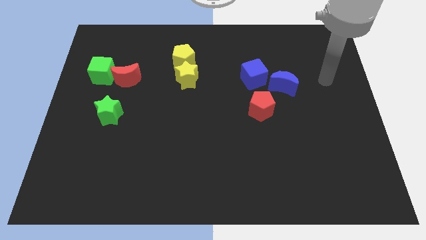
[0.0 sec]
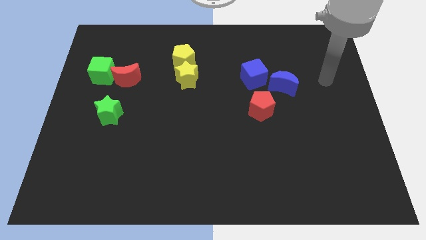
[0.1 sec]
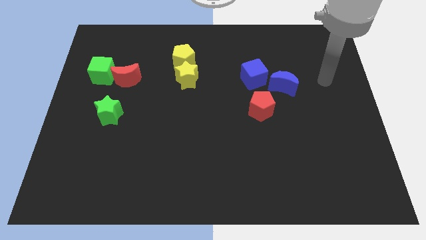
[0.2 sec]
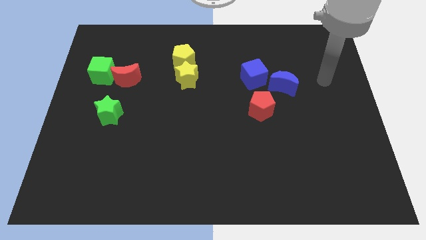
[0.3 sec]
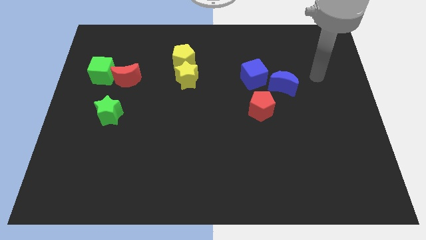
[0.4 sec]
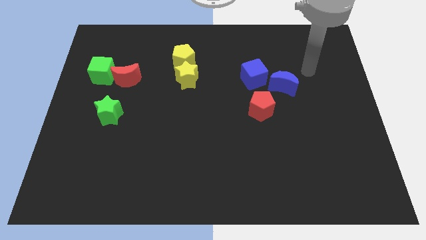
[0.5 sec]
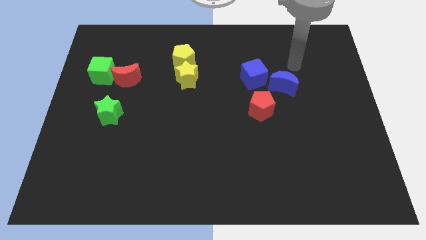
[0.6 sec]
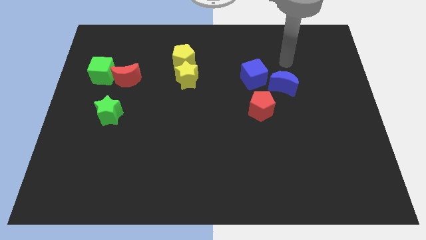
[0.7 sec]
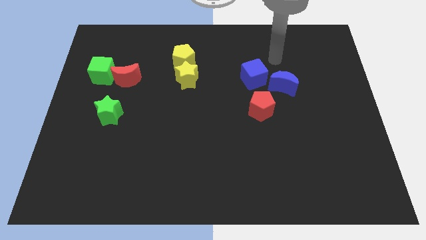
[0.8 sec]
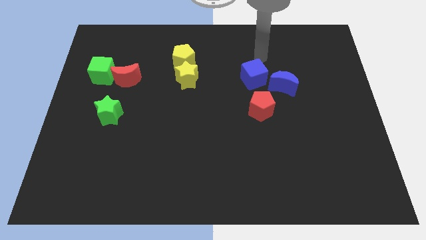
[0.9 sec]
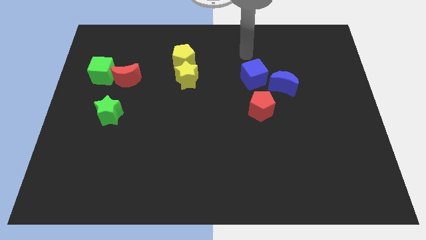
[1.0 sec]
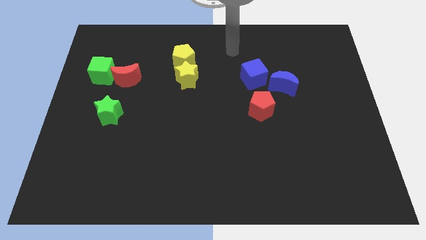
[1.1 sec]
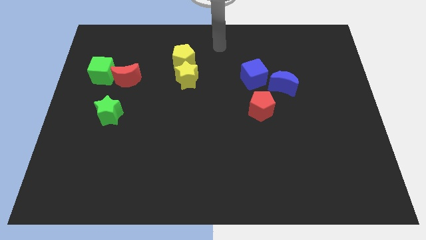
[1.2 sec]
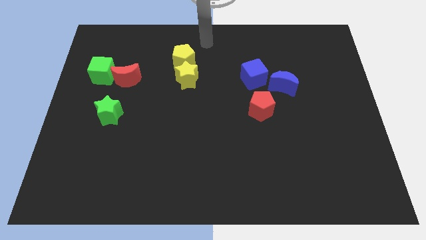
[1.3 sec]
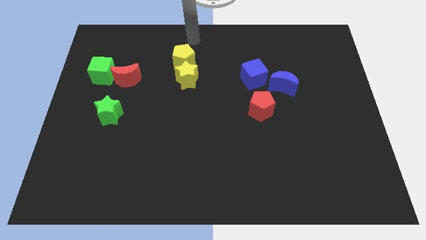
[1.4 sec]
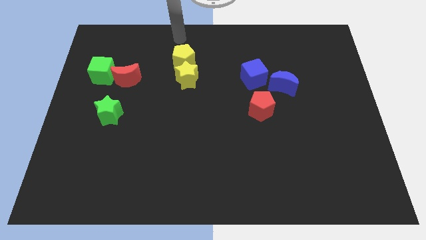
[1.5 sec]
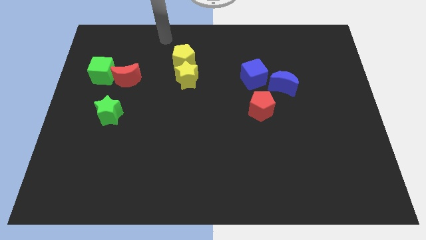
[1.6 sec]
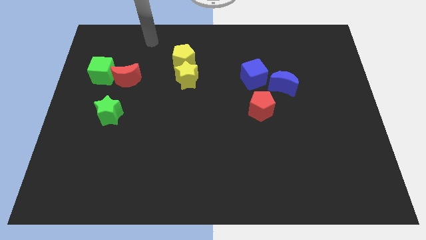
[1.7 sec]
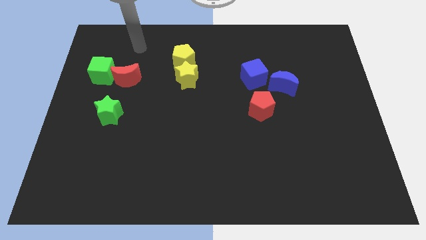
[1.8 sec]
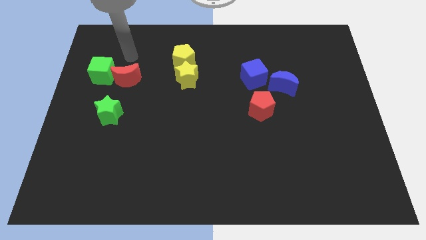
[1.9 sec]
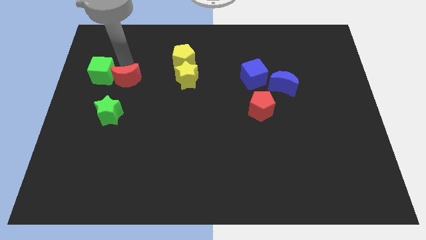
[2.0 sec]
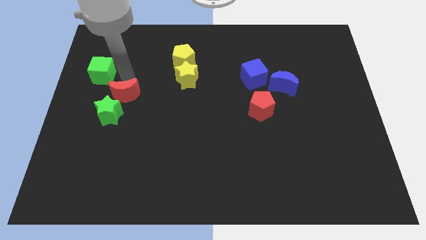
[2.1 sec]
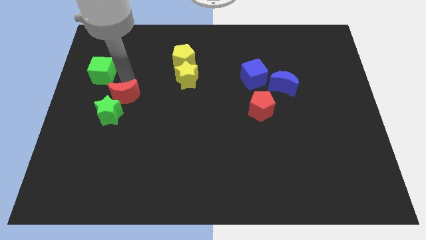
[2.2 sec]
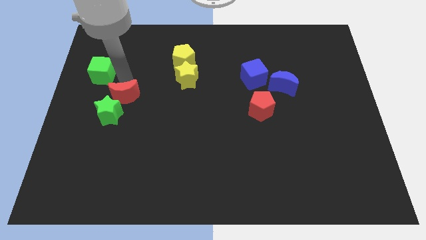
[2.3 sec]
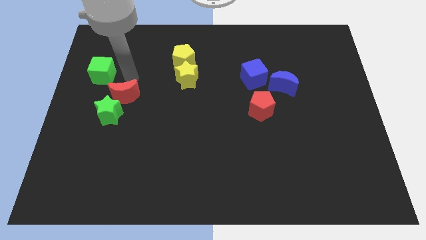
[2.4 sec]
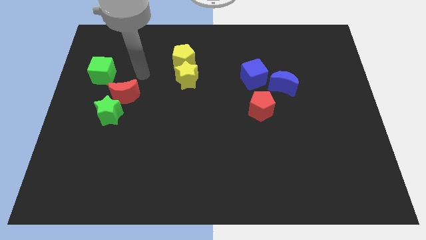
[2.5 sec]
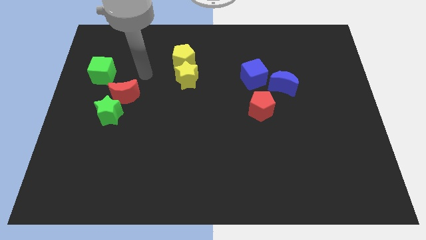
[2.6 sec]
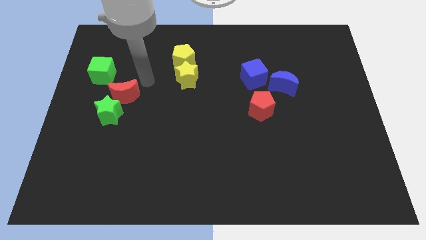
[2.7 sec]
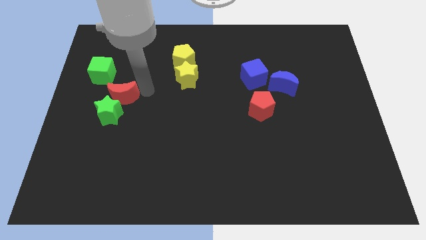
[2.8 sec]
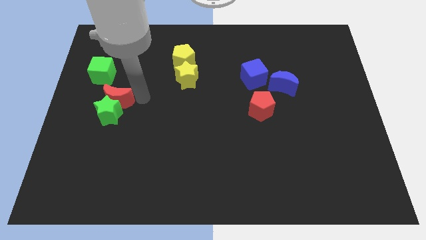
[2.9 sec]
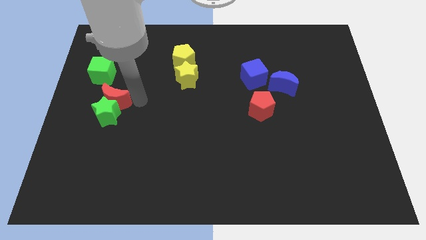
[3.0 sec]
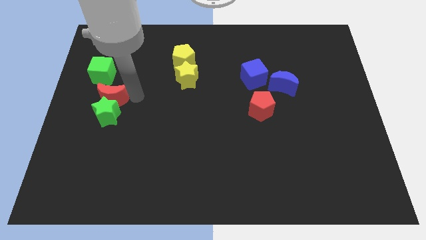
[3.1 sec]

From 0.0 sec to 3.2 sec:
push red crescent slightly to the left

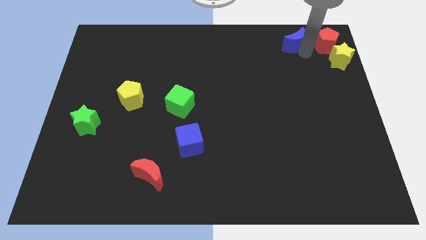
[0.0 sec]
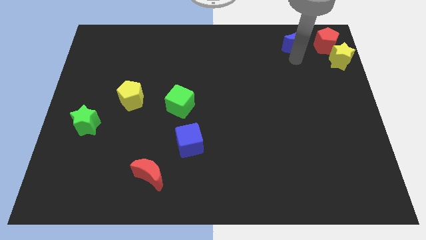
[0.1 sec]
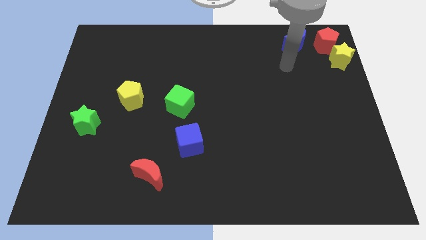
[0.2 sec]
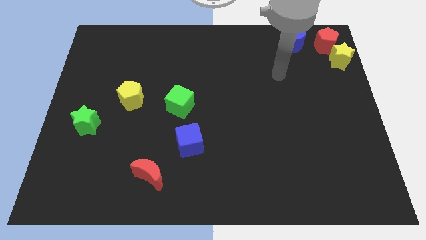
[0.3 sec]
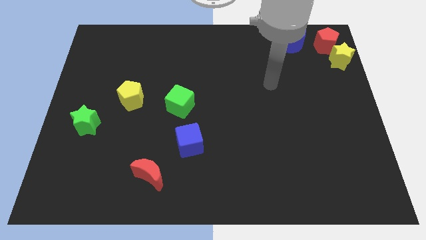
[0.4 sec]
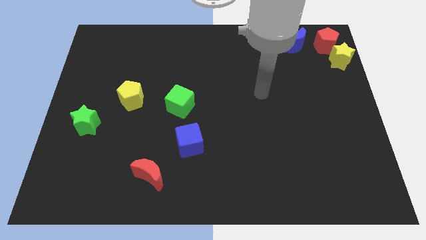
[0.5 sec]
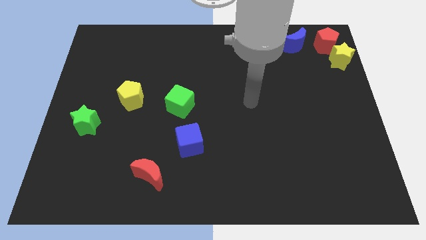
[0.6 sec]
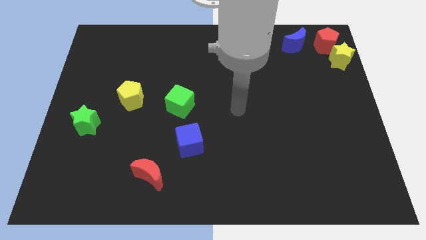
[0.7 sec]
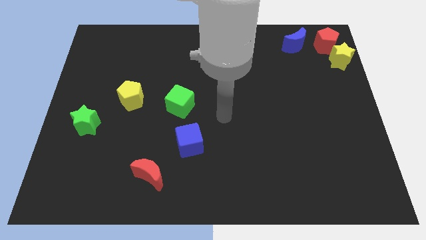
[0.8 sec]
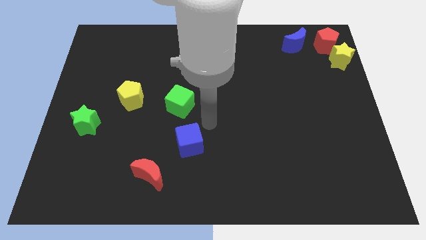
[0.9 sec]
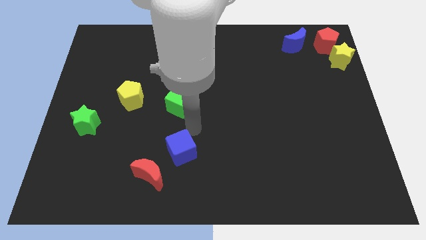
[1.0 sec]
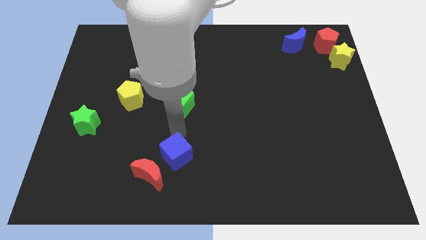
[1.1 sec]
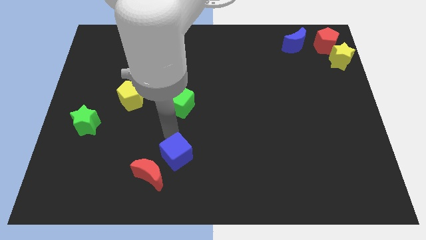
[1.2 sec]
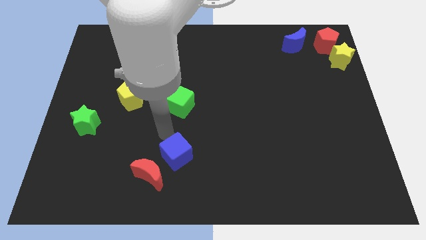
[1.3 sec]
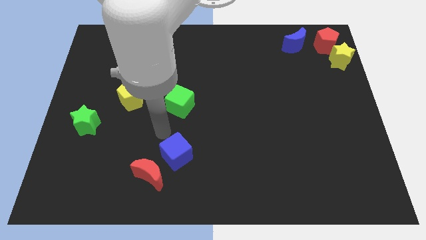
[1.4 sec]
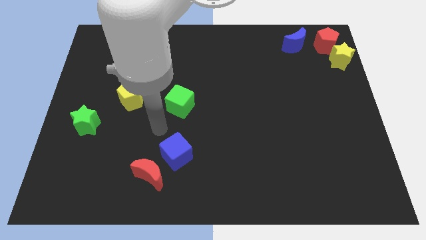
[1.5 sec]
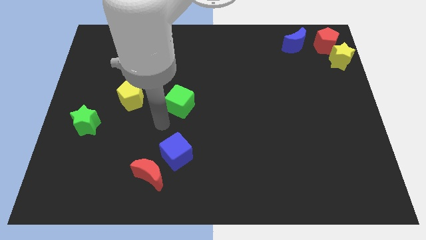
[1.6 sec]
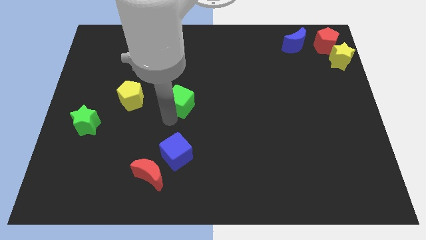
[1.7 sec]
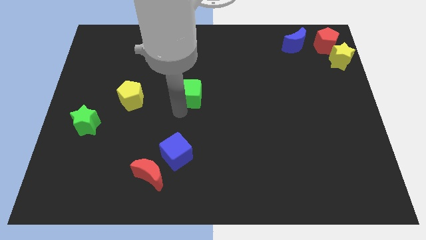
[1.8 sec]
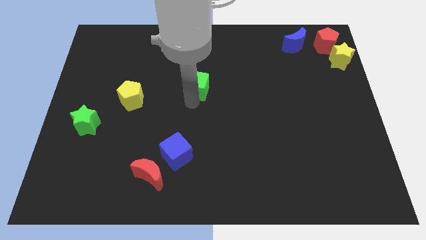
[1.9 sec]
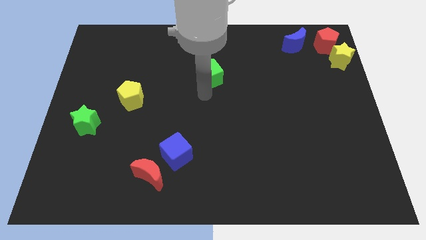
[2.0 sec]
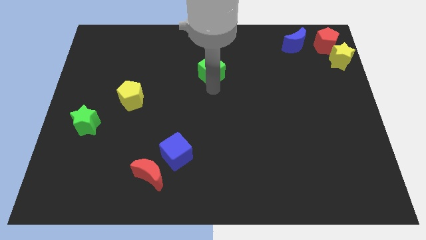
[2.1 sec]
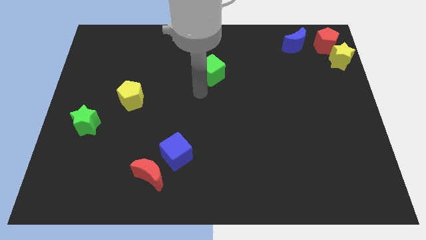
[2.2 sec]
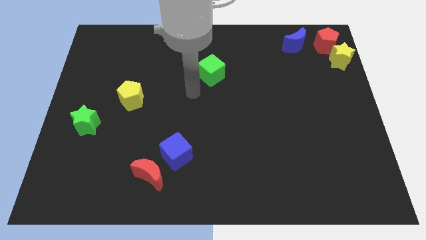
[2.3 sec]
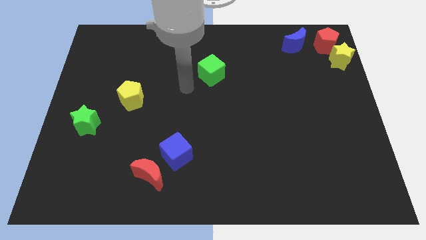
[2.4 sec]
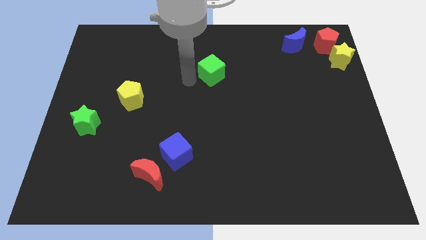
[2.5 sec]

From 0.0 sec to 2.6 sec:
push the cubes in opposite directions

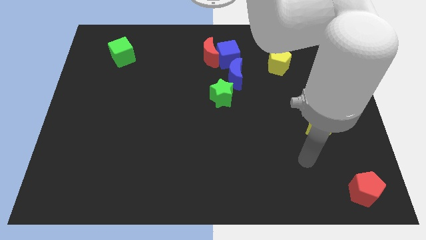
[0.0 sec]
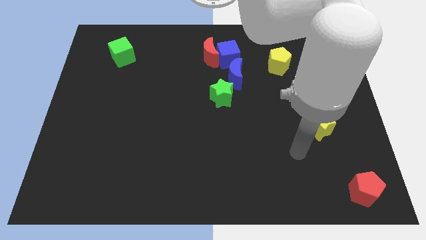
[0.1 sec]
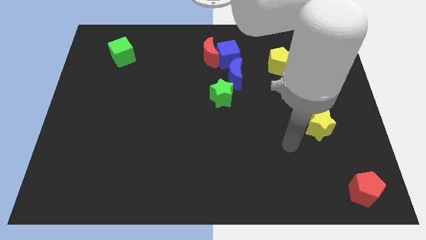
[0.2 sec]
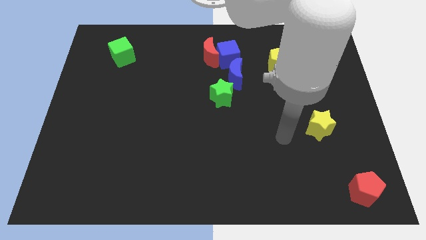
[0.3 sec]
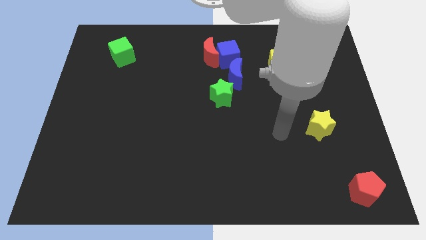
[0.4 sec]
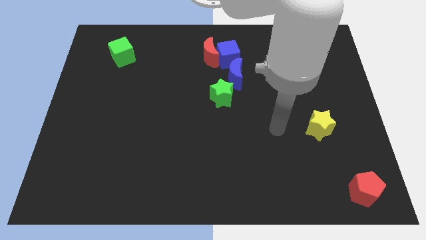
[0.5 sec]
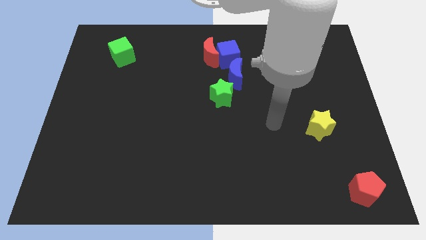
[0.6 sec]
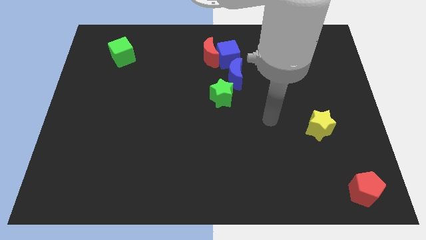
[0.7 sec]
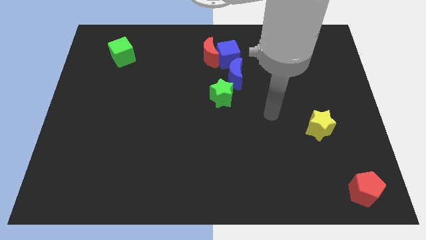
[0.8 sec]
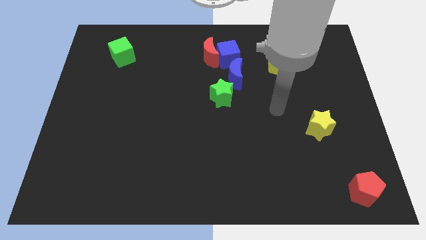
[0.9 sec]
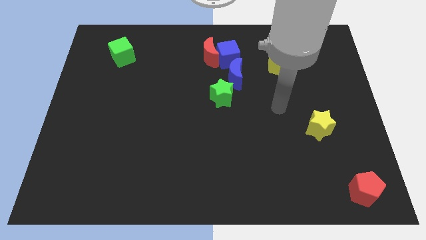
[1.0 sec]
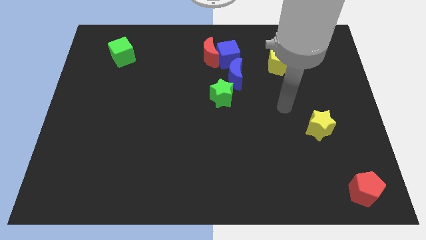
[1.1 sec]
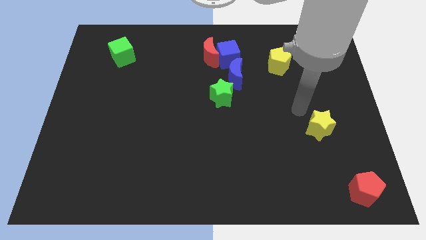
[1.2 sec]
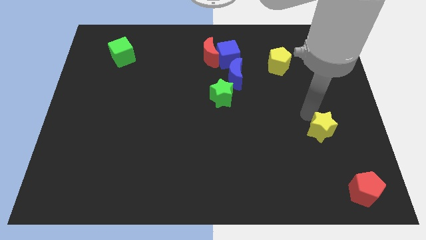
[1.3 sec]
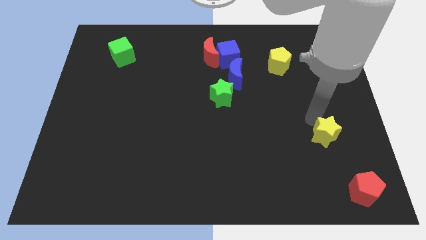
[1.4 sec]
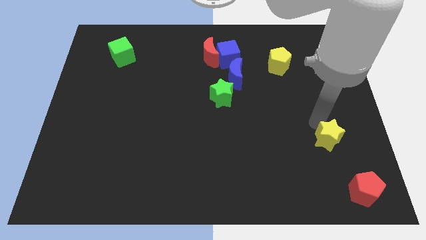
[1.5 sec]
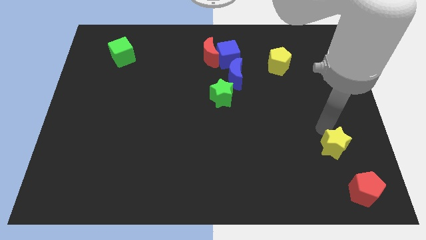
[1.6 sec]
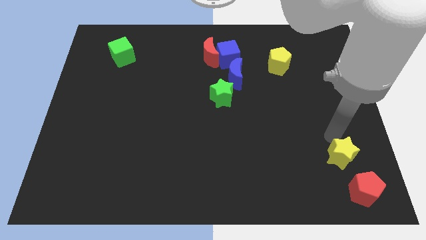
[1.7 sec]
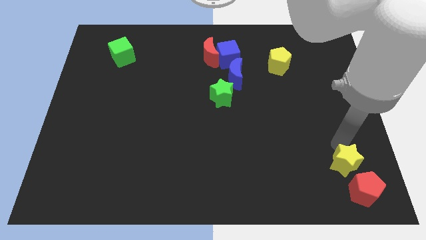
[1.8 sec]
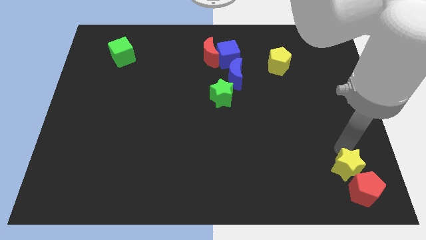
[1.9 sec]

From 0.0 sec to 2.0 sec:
push the yellow star close to the red pentagon

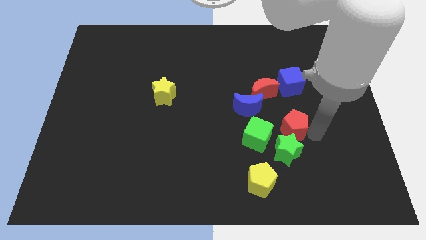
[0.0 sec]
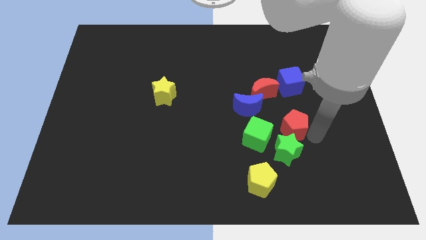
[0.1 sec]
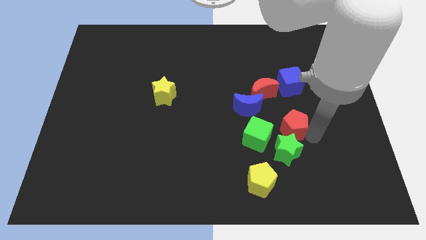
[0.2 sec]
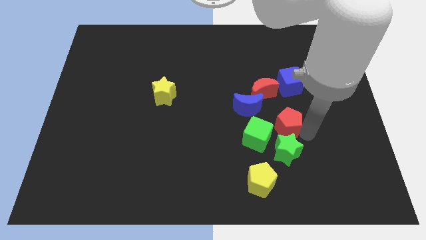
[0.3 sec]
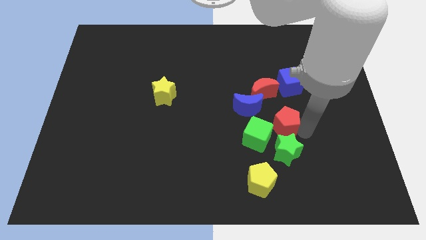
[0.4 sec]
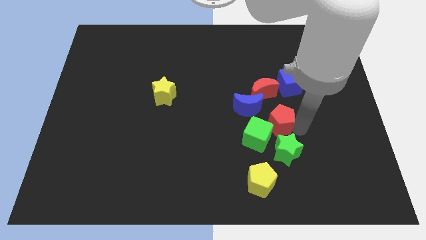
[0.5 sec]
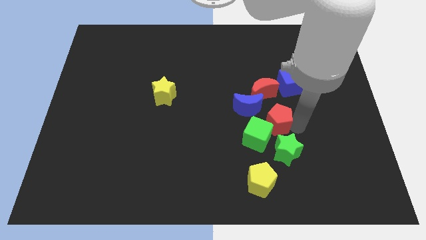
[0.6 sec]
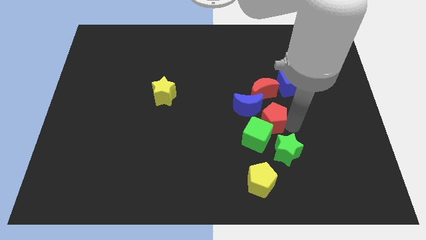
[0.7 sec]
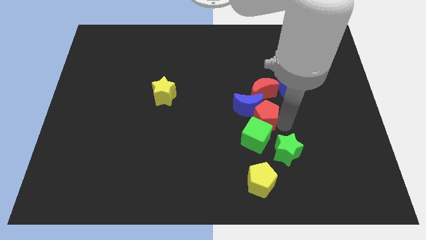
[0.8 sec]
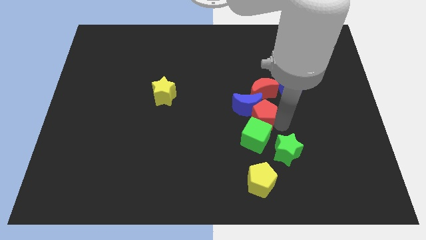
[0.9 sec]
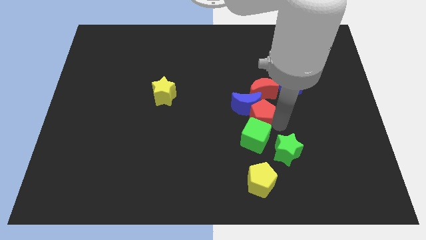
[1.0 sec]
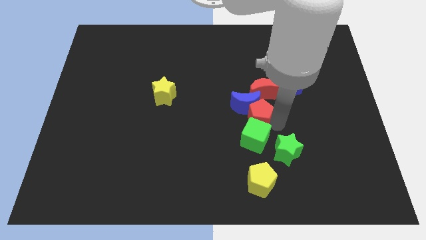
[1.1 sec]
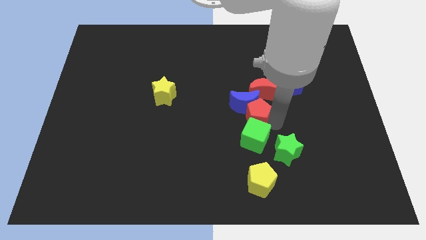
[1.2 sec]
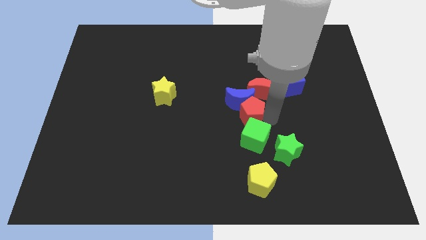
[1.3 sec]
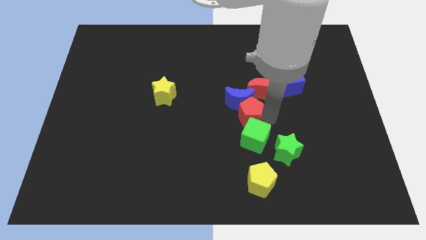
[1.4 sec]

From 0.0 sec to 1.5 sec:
place the red pentagon in between the blue moon and green cube
